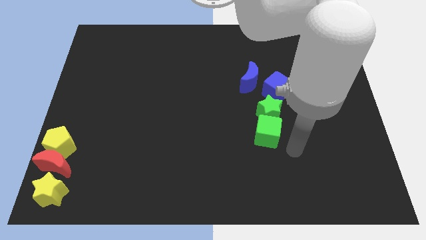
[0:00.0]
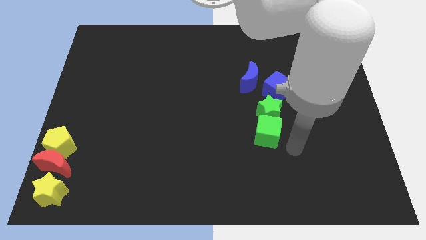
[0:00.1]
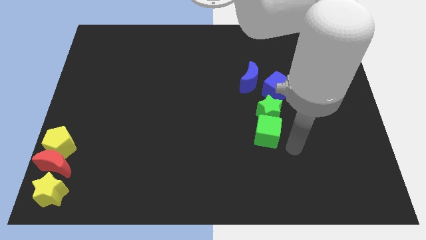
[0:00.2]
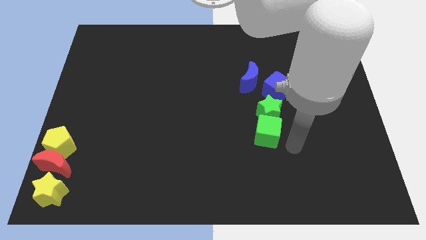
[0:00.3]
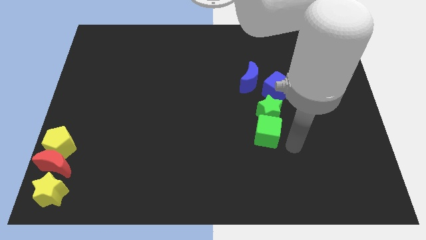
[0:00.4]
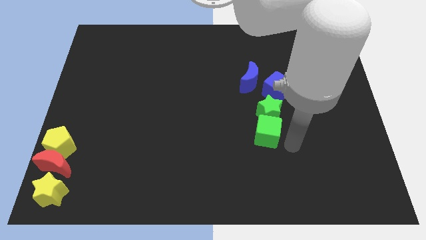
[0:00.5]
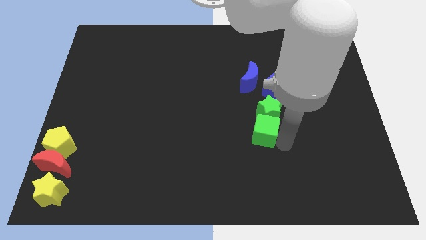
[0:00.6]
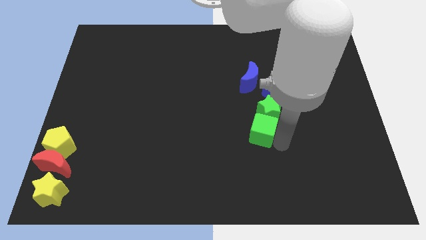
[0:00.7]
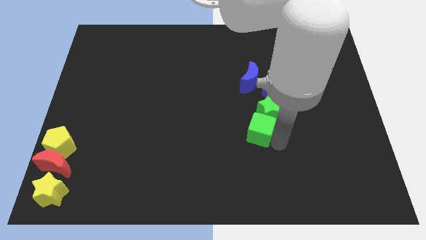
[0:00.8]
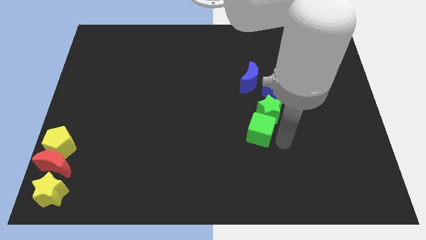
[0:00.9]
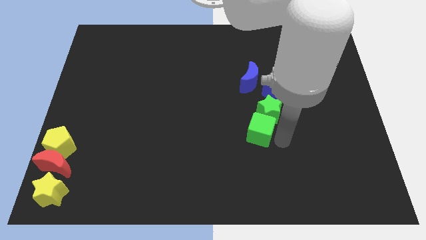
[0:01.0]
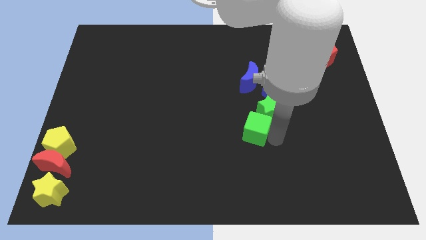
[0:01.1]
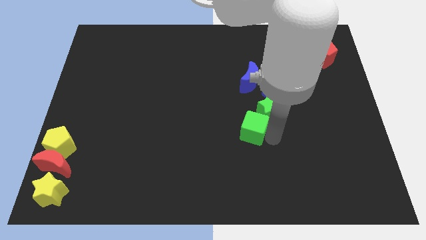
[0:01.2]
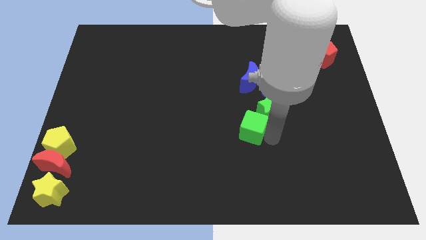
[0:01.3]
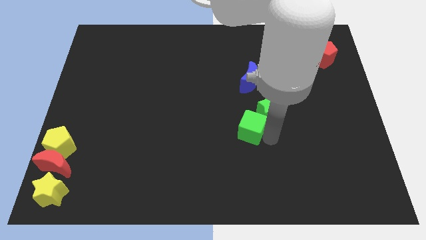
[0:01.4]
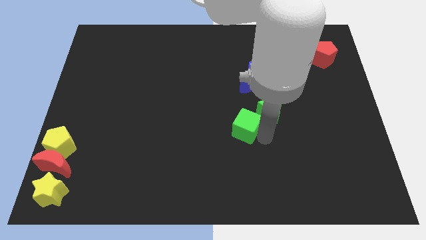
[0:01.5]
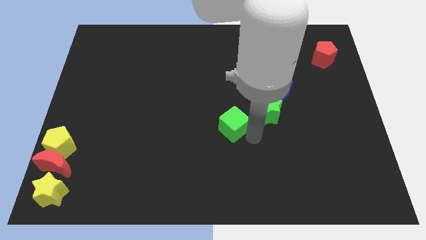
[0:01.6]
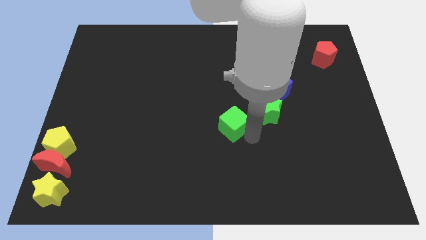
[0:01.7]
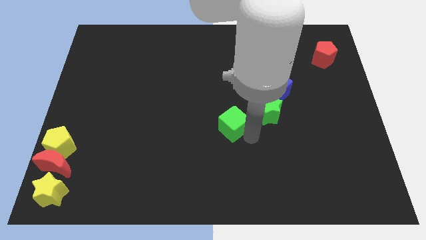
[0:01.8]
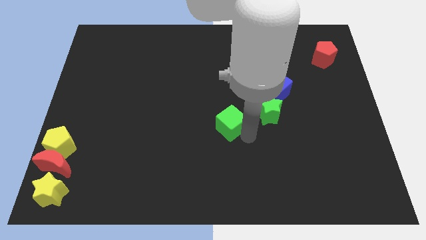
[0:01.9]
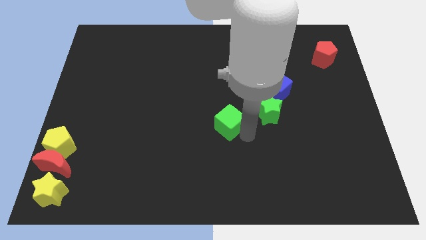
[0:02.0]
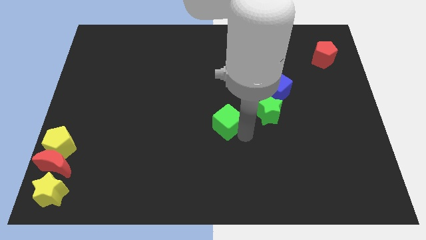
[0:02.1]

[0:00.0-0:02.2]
push green cube below blue crescent

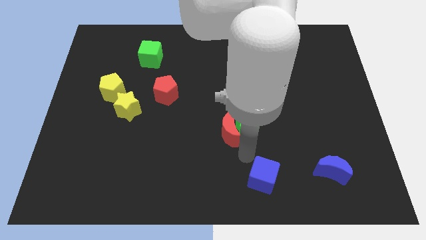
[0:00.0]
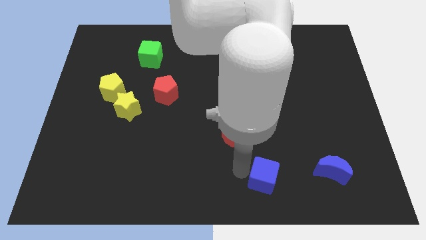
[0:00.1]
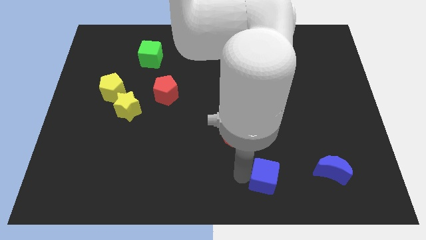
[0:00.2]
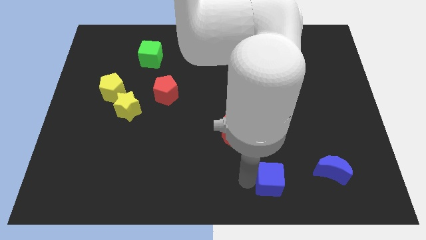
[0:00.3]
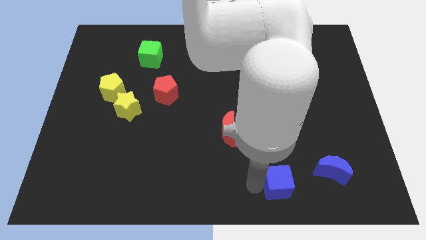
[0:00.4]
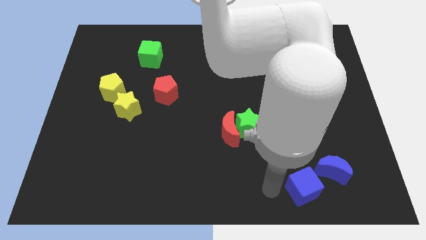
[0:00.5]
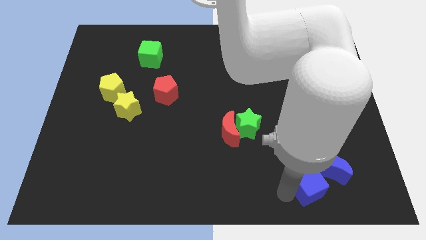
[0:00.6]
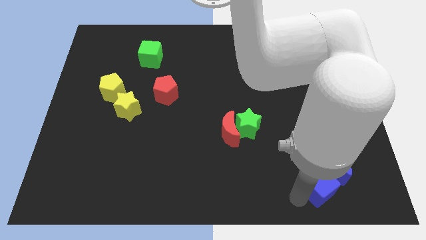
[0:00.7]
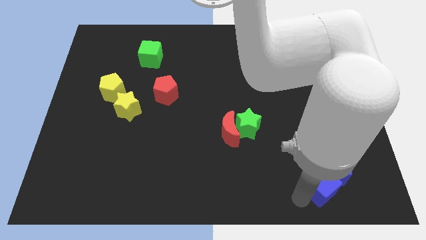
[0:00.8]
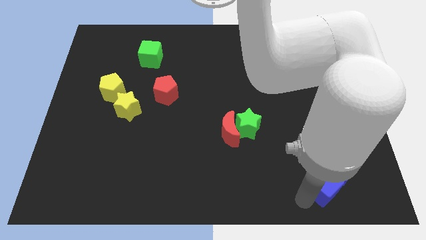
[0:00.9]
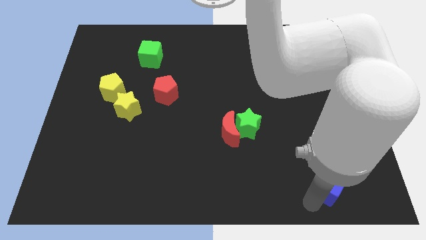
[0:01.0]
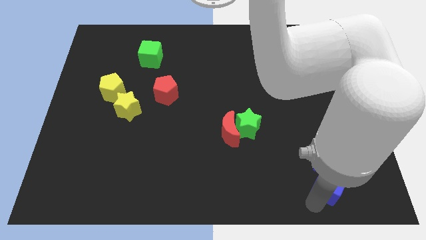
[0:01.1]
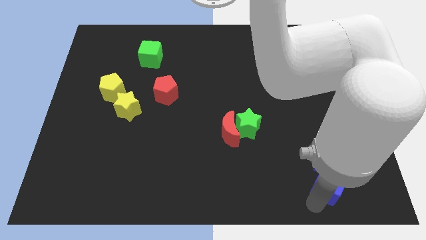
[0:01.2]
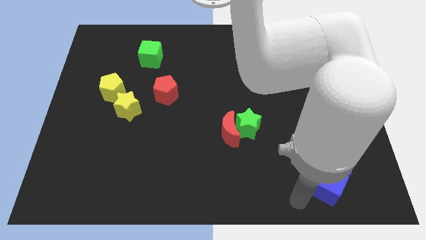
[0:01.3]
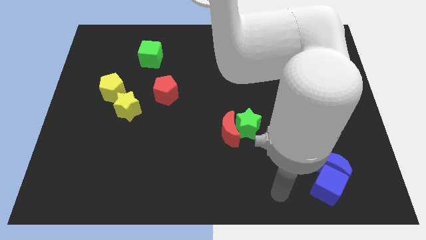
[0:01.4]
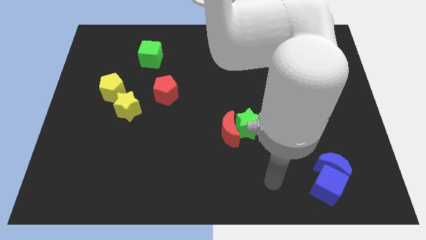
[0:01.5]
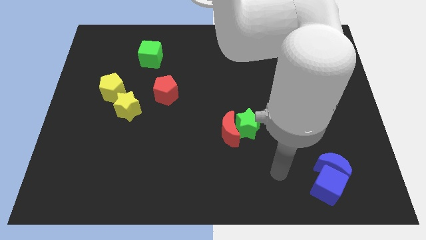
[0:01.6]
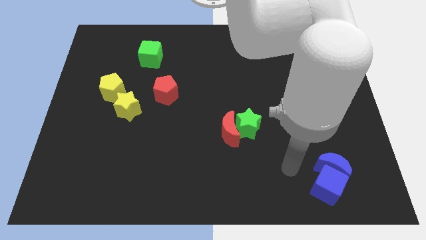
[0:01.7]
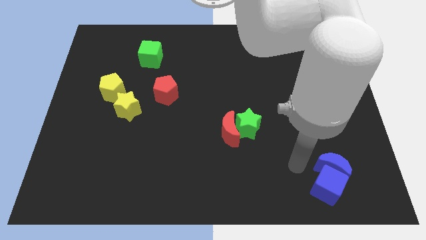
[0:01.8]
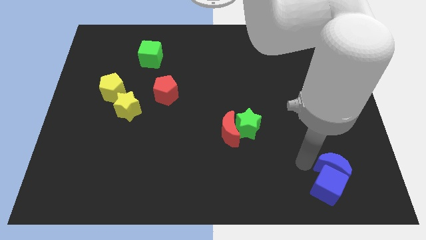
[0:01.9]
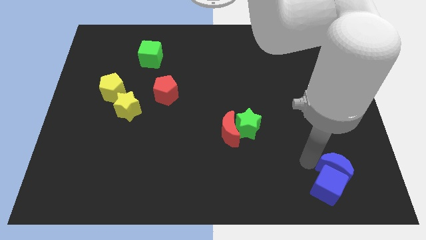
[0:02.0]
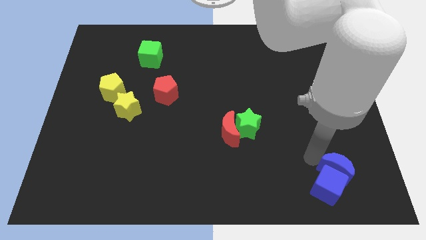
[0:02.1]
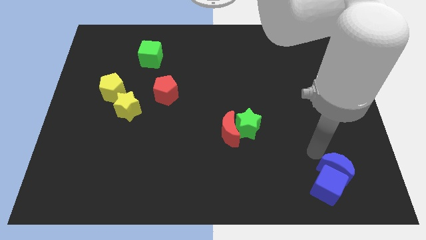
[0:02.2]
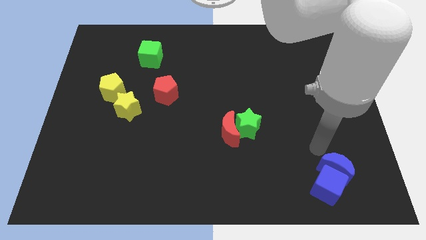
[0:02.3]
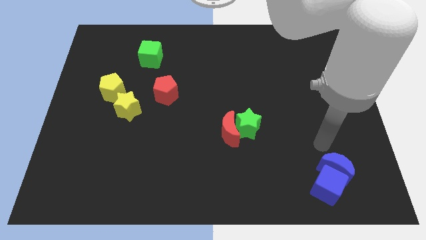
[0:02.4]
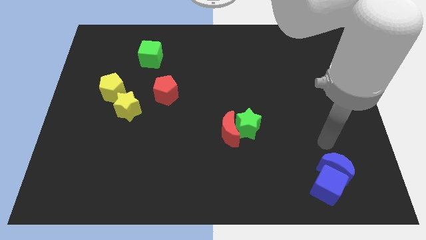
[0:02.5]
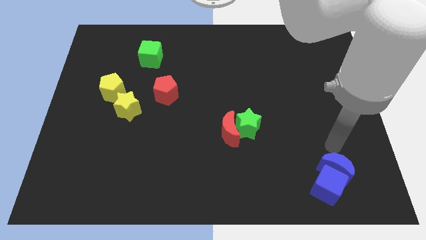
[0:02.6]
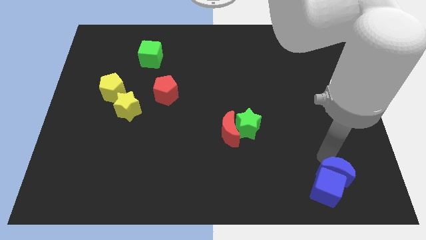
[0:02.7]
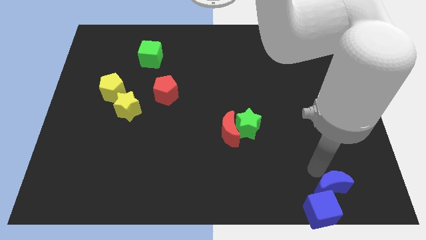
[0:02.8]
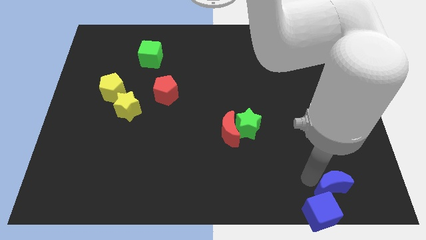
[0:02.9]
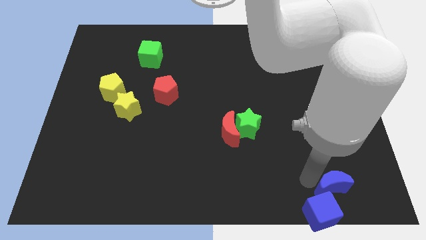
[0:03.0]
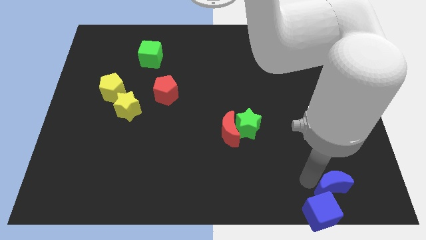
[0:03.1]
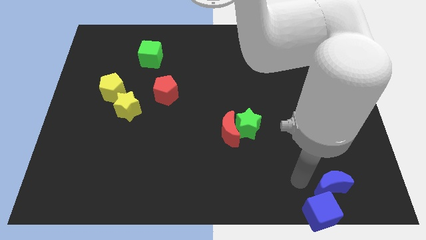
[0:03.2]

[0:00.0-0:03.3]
push the blue cube and blue moon towards the bottom side of the board

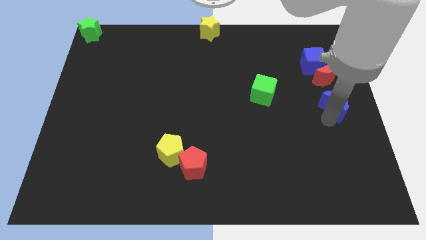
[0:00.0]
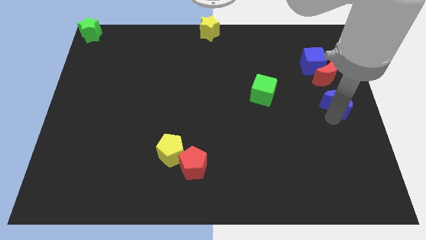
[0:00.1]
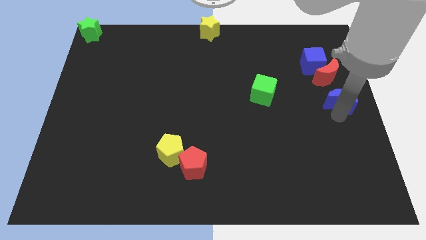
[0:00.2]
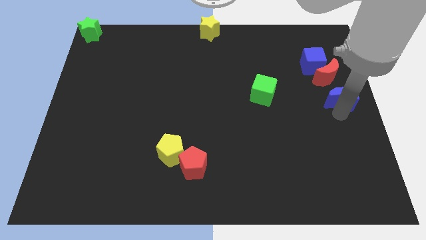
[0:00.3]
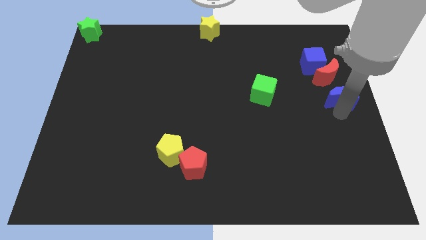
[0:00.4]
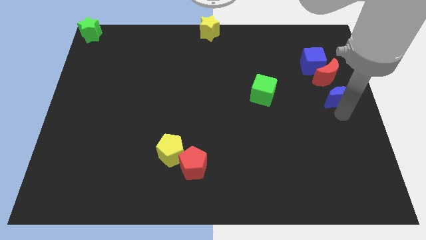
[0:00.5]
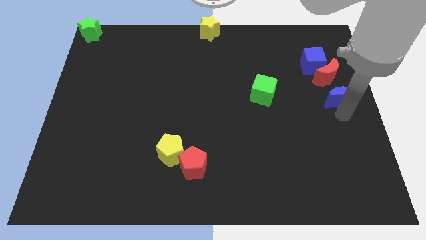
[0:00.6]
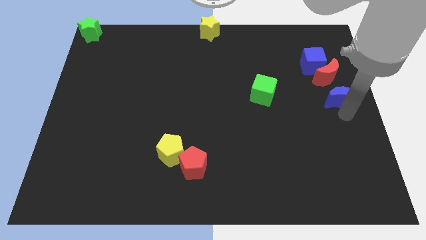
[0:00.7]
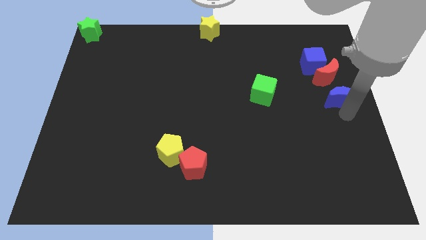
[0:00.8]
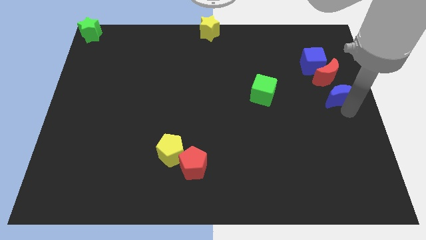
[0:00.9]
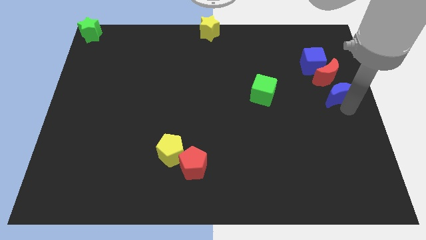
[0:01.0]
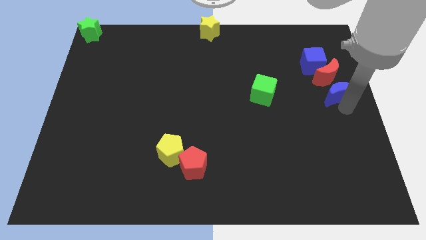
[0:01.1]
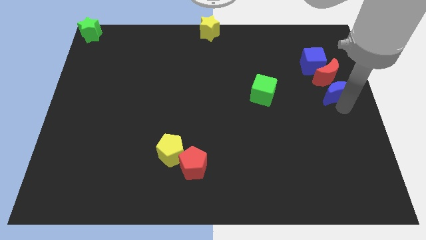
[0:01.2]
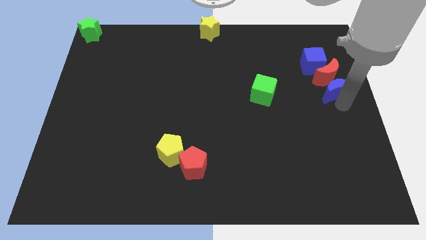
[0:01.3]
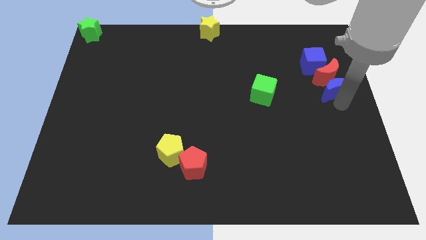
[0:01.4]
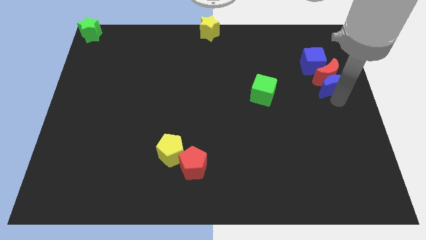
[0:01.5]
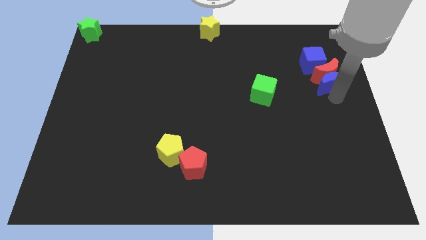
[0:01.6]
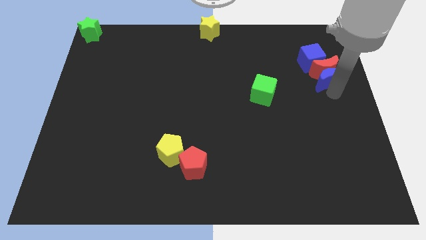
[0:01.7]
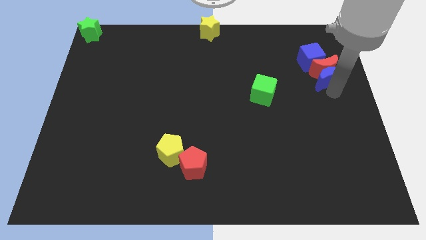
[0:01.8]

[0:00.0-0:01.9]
push the blue moon into the red moon

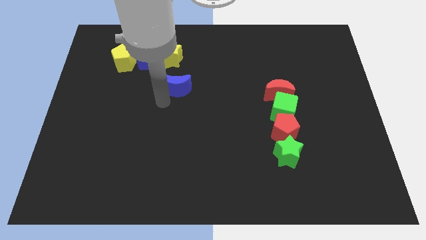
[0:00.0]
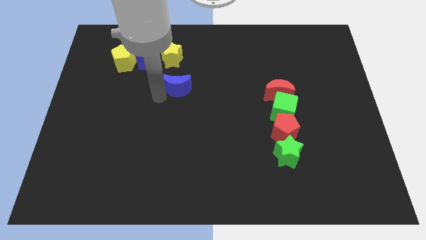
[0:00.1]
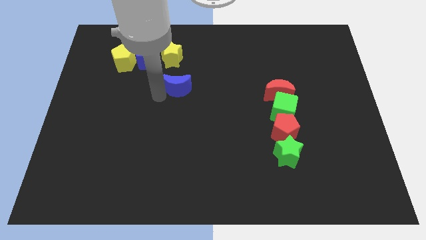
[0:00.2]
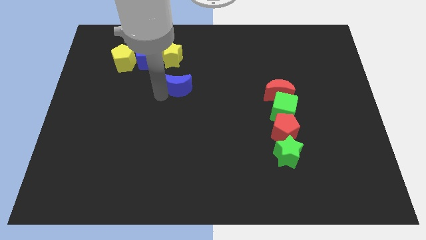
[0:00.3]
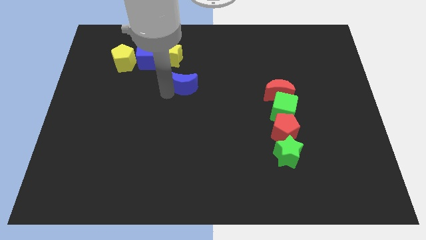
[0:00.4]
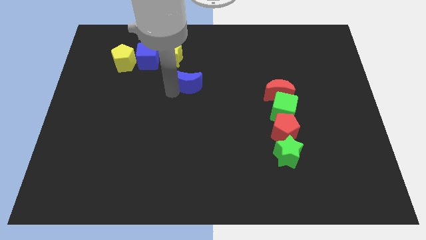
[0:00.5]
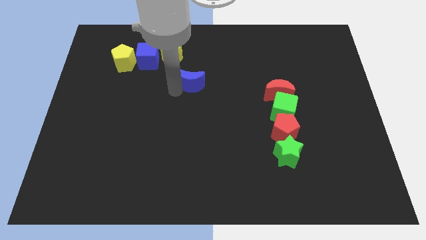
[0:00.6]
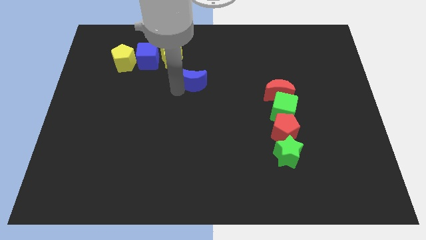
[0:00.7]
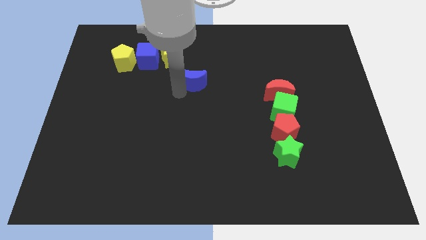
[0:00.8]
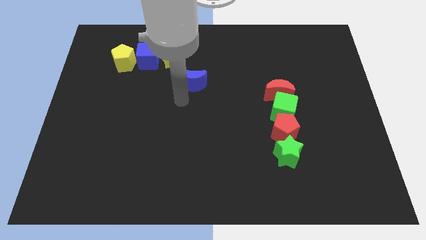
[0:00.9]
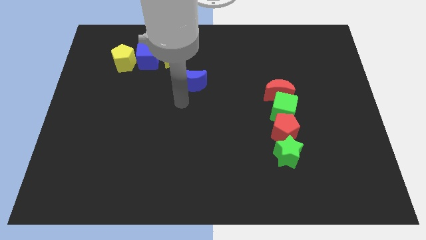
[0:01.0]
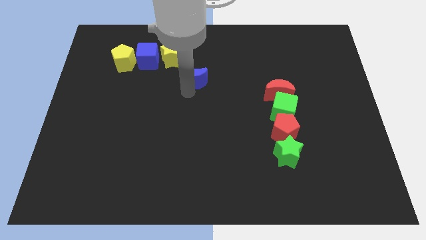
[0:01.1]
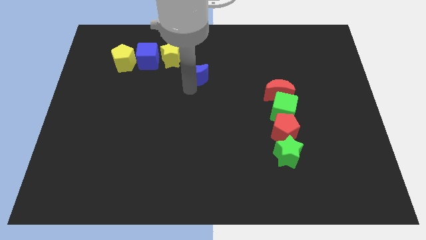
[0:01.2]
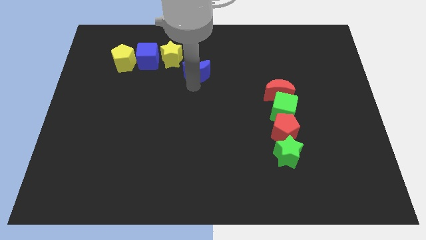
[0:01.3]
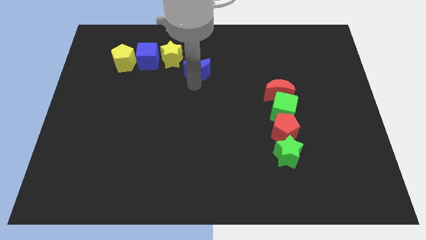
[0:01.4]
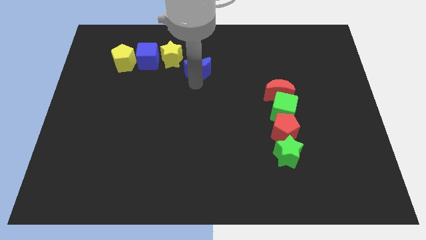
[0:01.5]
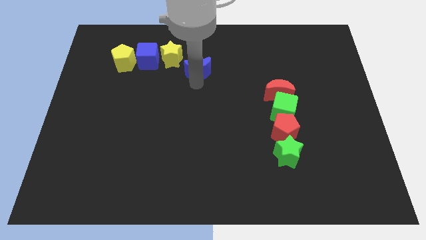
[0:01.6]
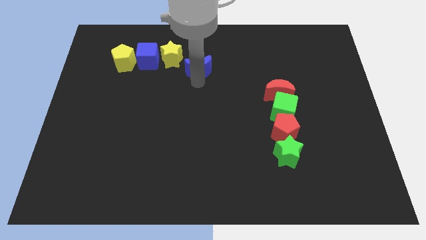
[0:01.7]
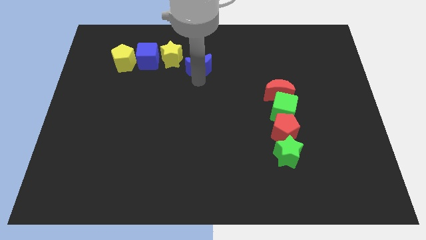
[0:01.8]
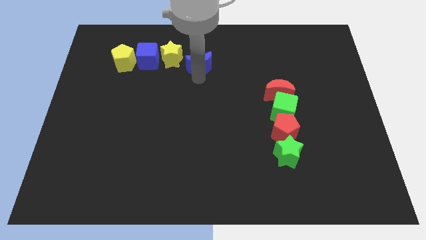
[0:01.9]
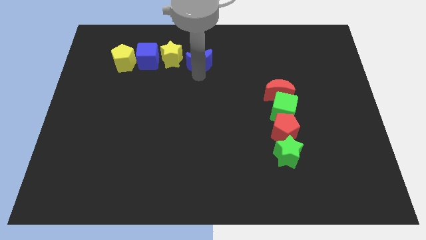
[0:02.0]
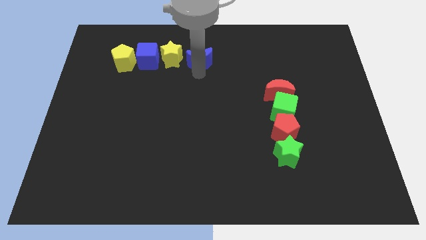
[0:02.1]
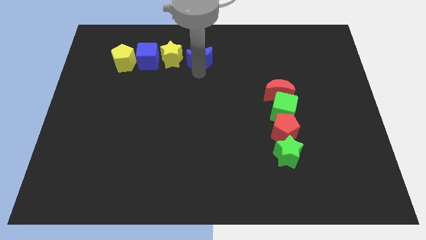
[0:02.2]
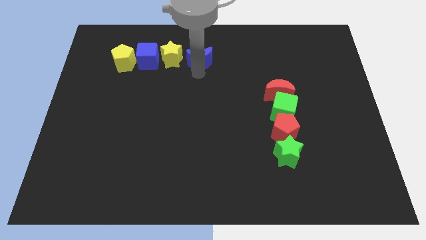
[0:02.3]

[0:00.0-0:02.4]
move the blue crescent to the right side of the yellow star
